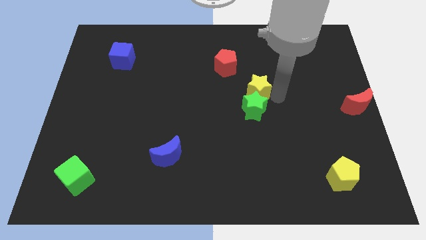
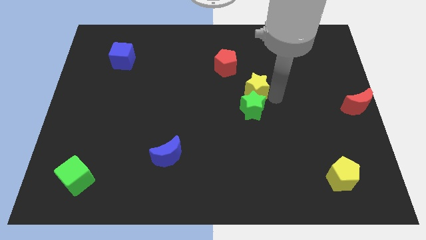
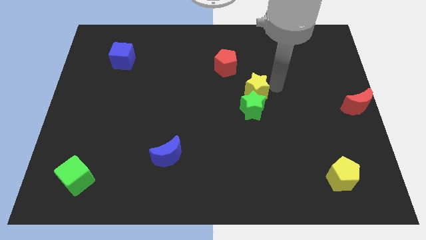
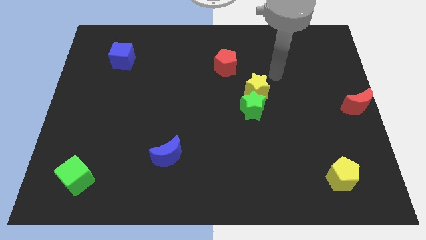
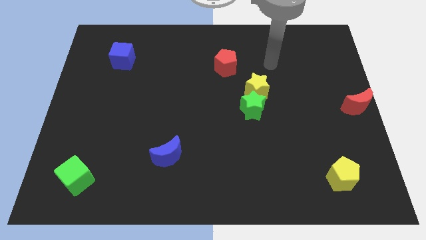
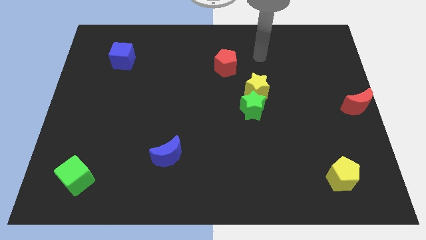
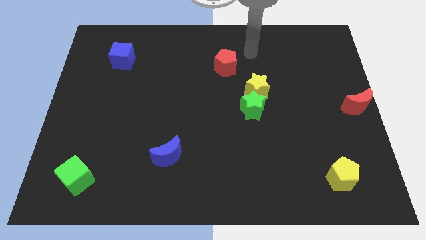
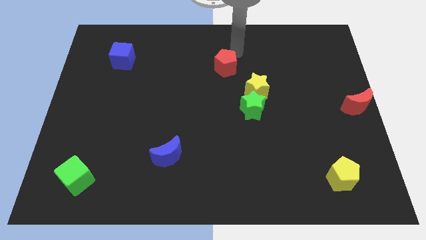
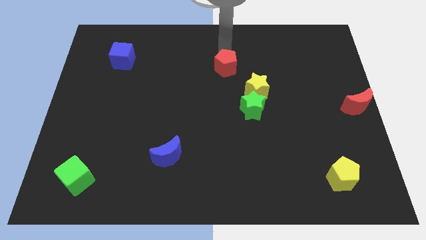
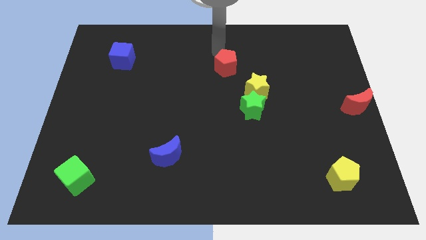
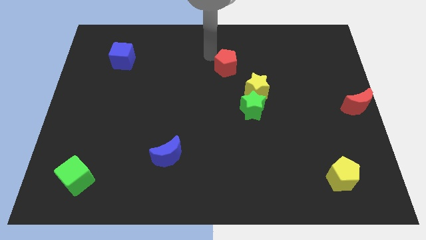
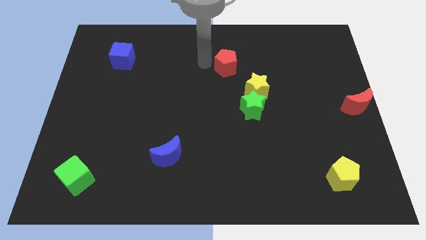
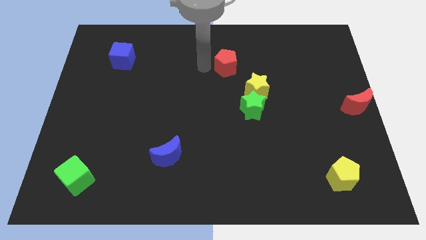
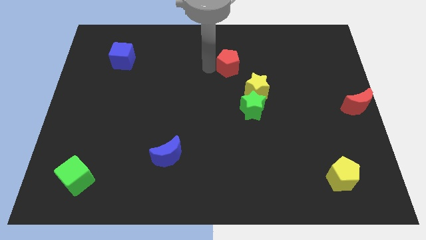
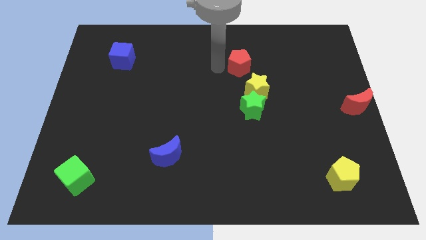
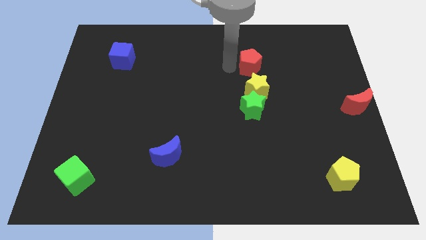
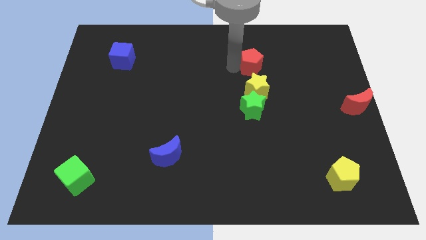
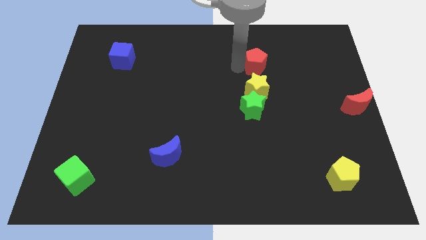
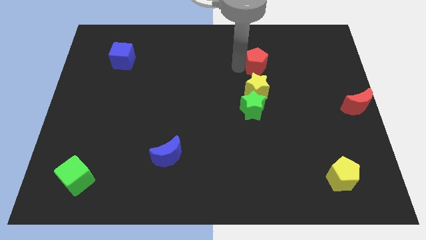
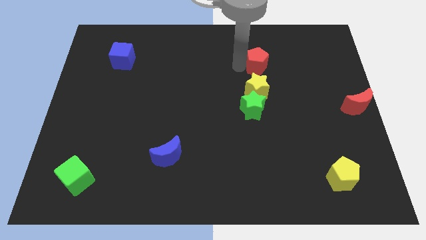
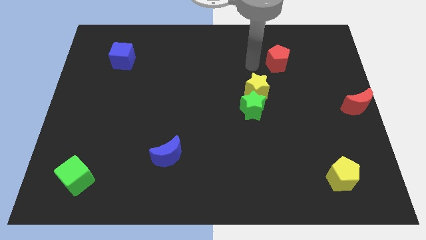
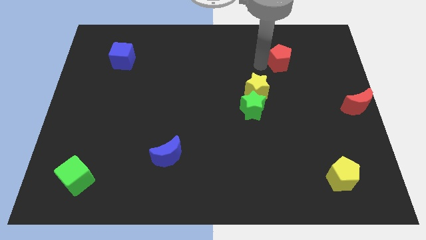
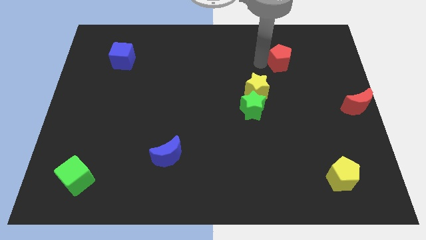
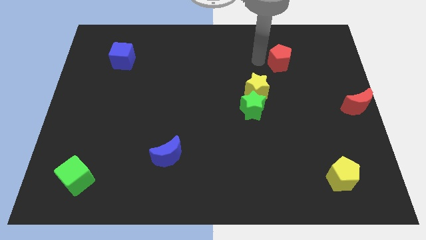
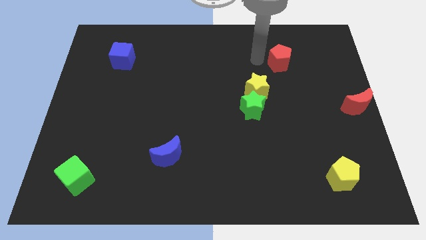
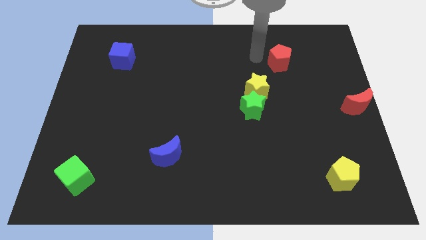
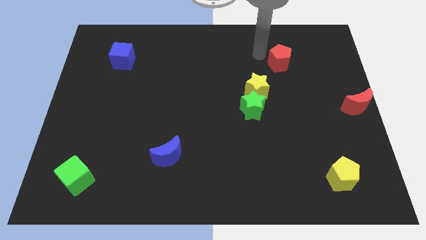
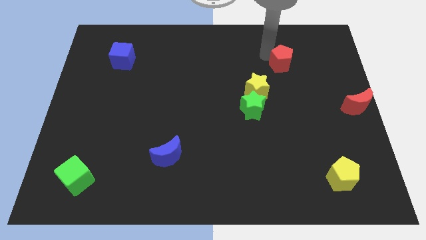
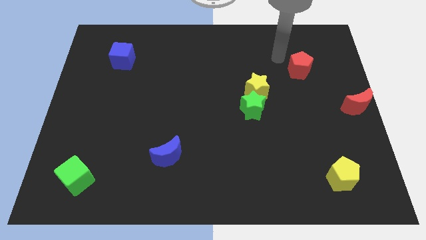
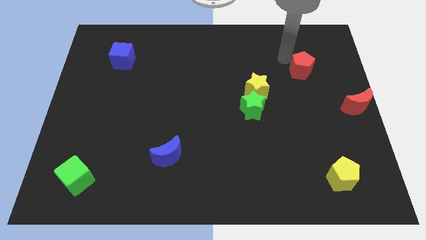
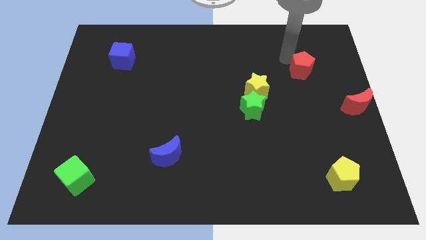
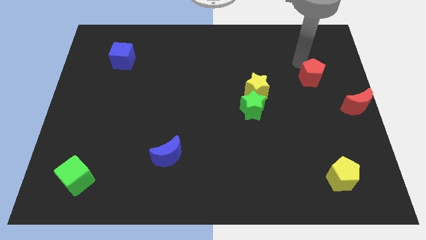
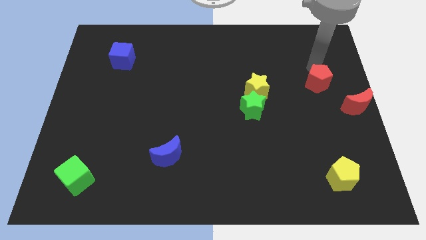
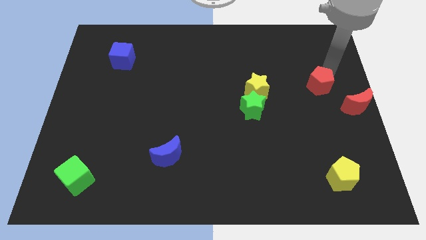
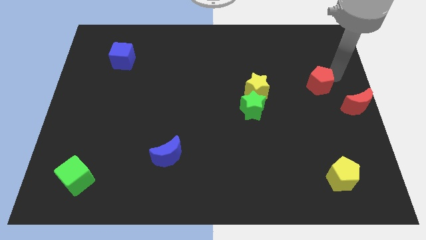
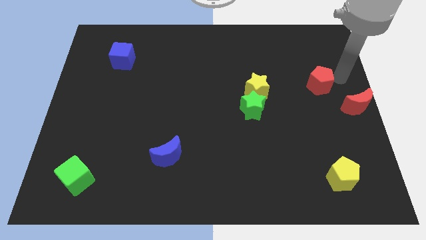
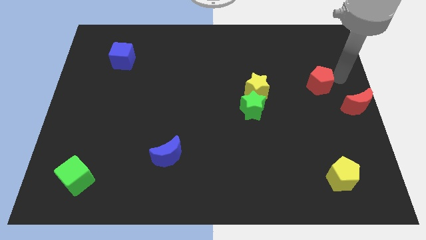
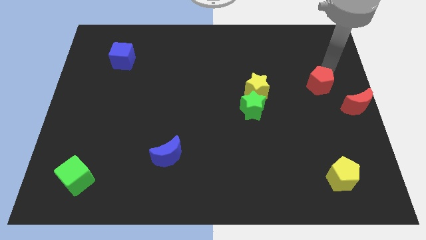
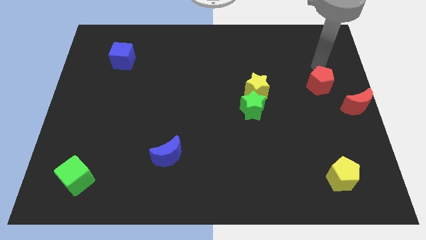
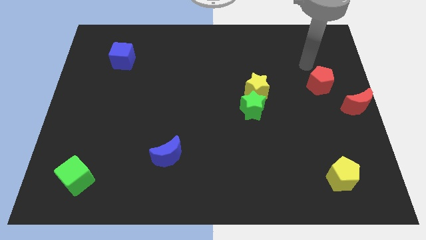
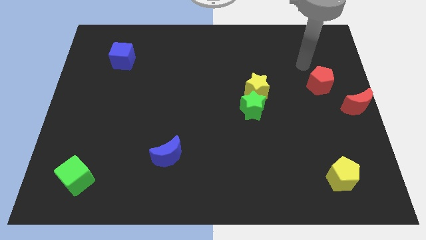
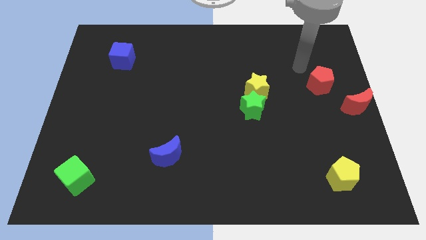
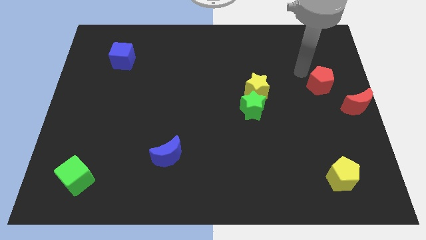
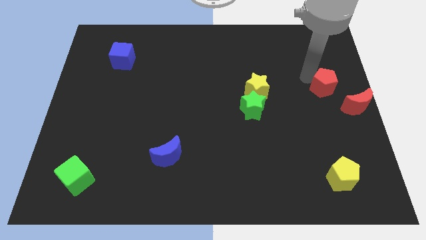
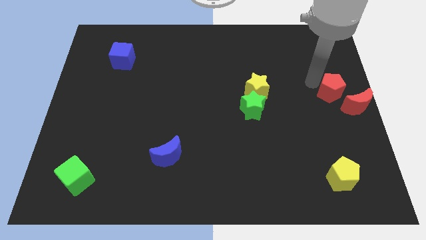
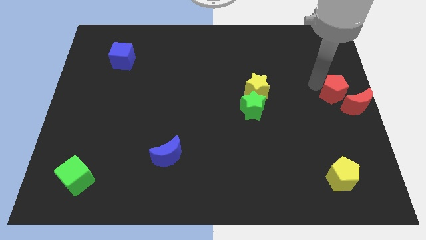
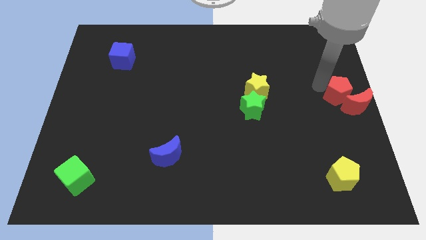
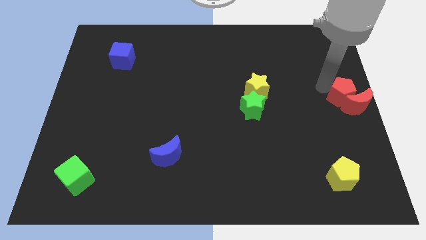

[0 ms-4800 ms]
push the red pentagon into the red crescent

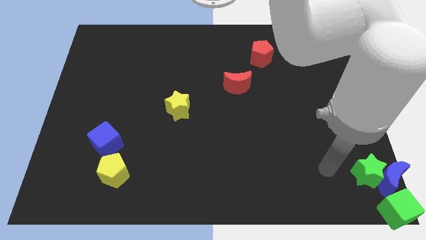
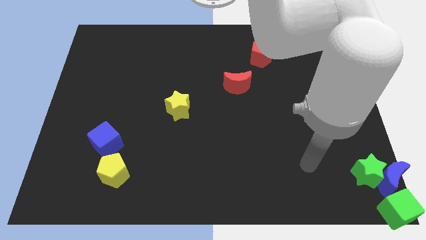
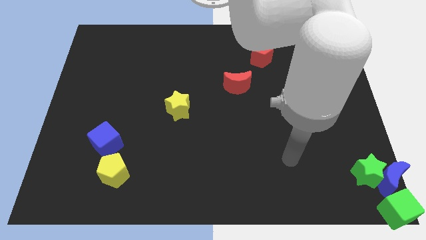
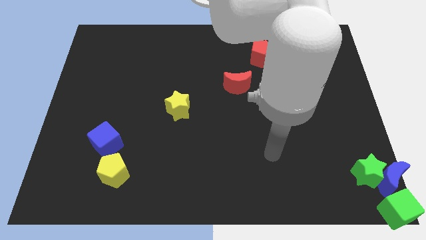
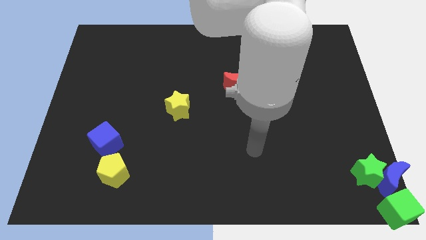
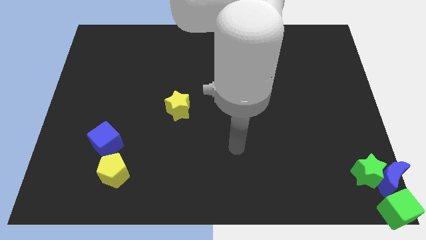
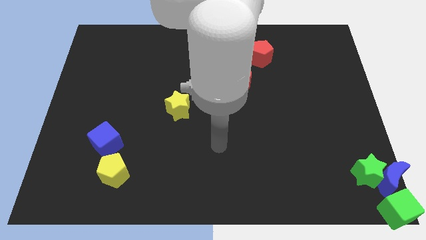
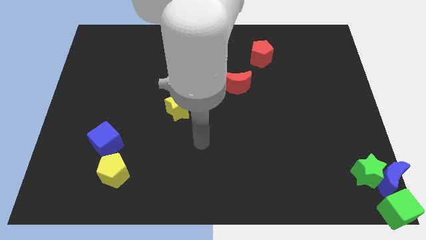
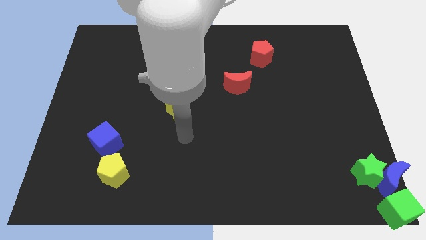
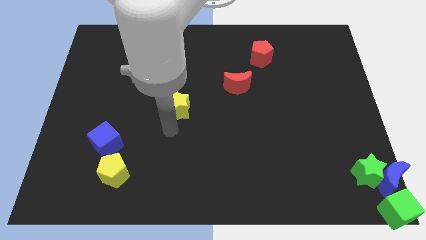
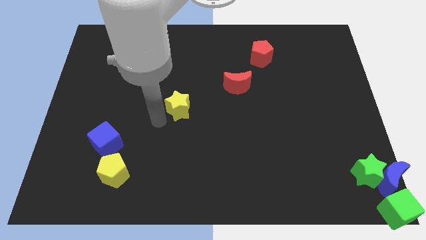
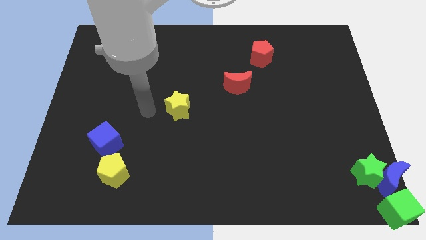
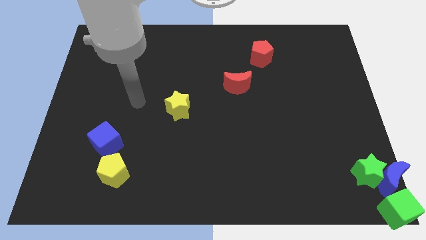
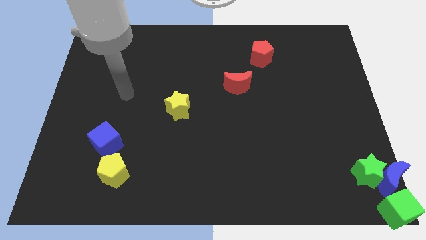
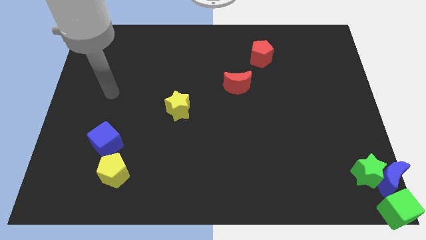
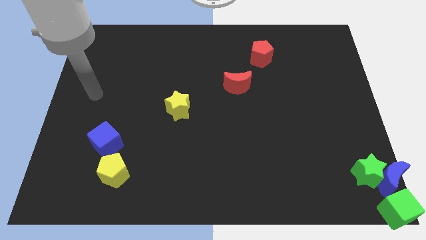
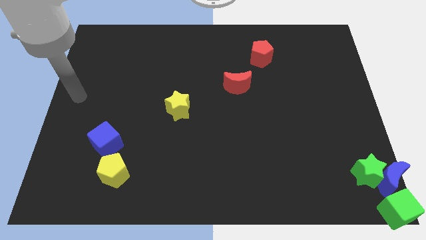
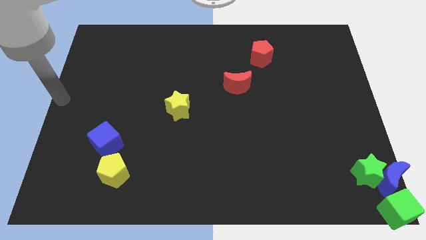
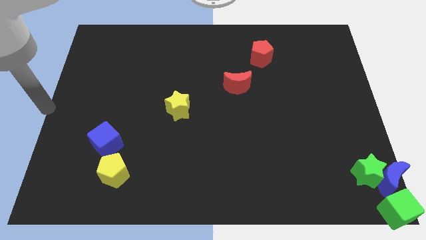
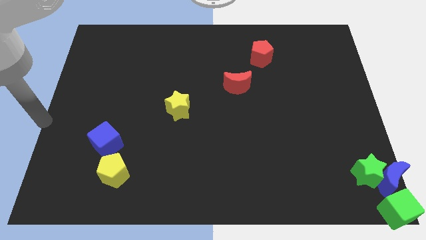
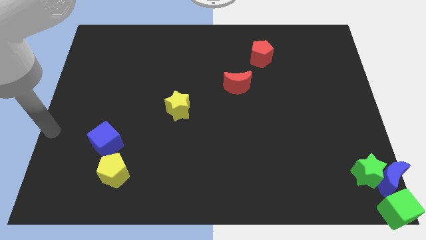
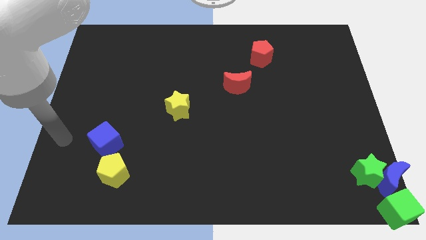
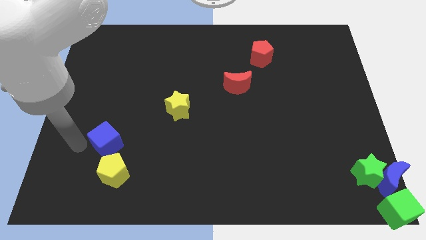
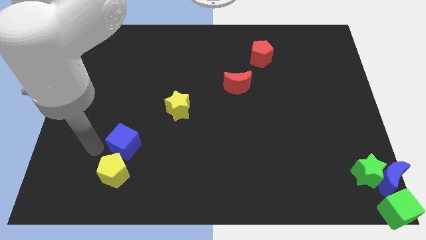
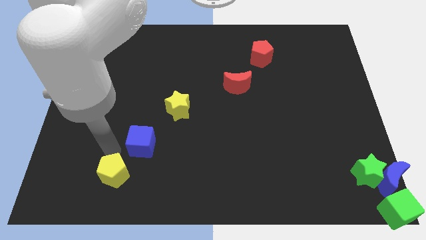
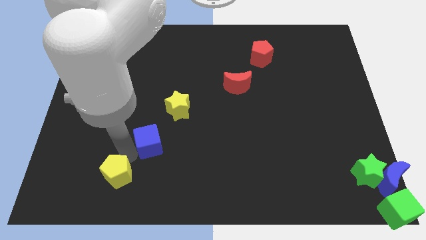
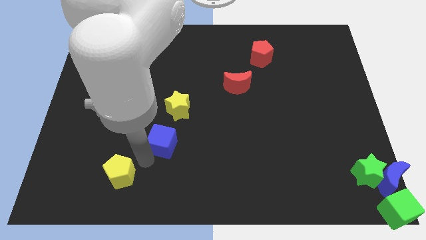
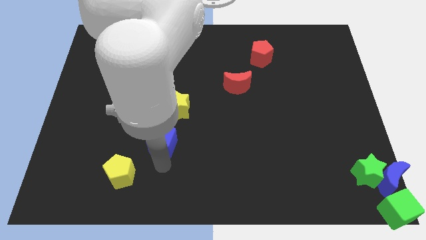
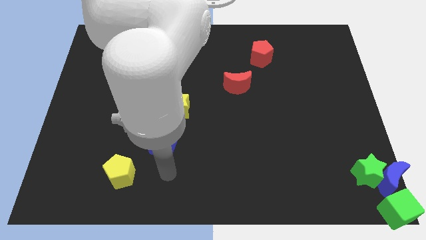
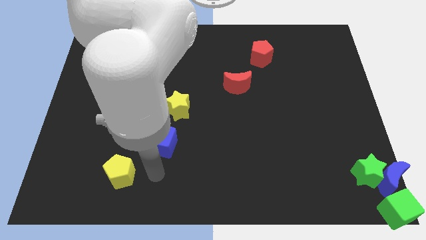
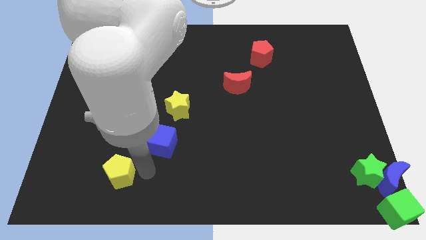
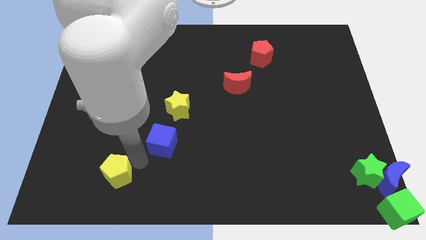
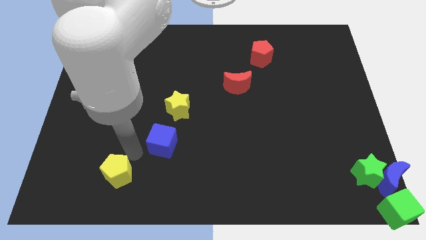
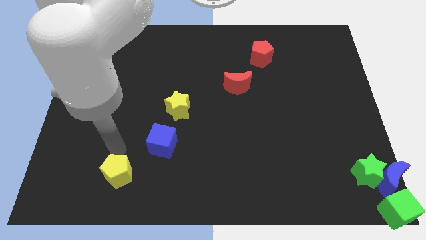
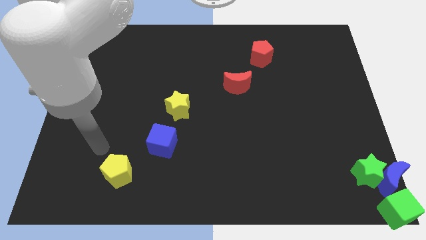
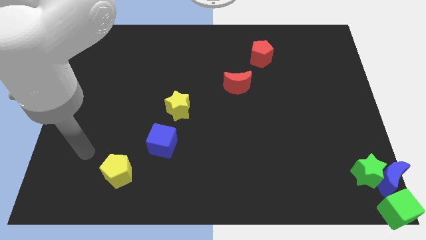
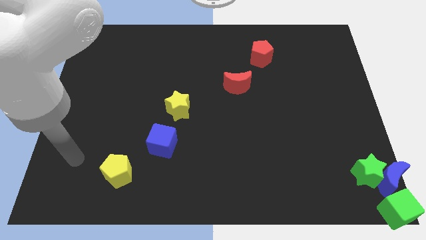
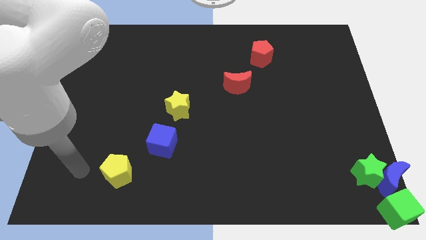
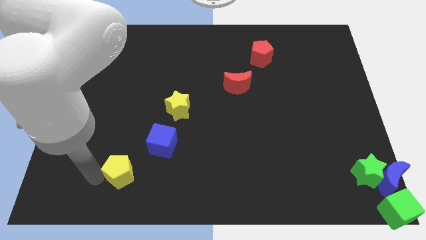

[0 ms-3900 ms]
place the blue cube below the yellow star

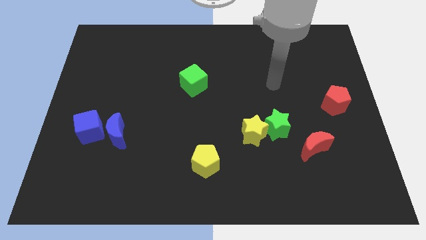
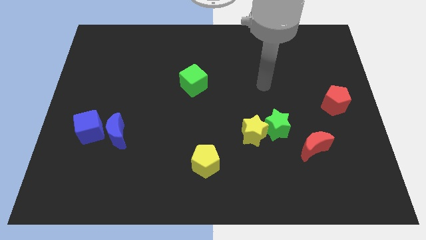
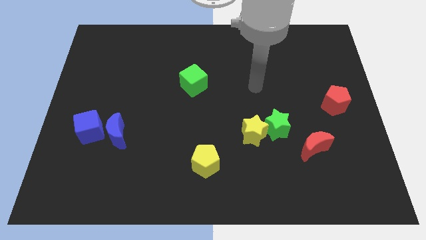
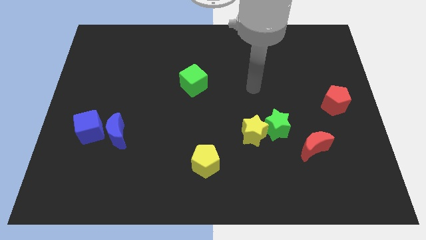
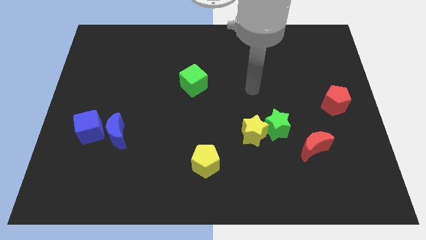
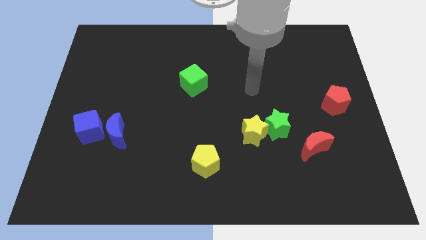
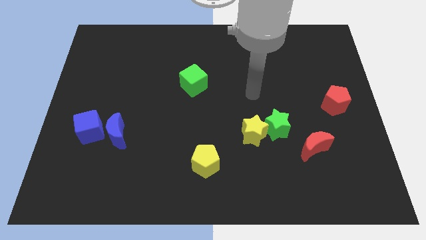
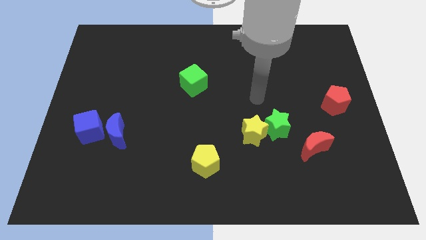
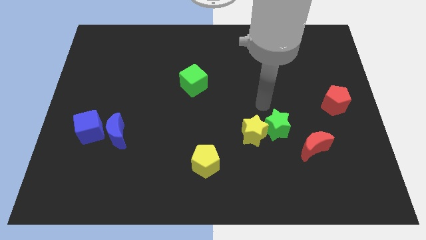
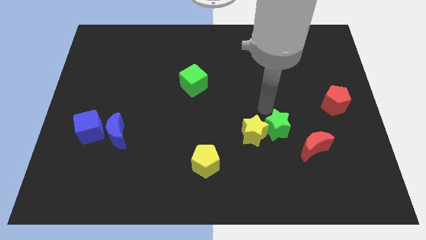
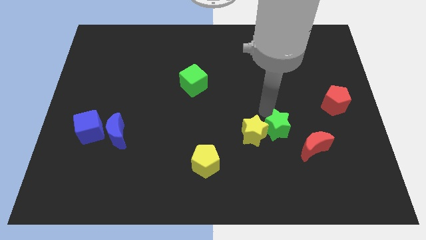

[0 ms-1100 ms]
move your arm towards the green star
